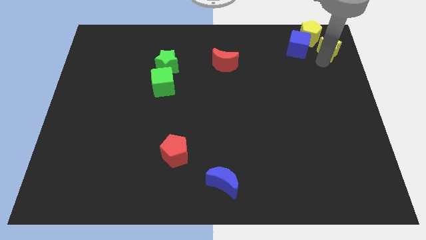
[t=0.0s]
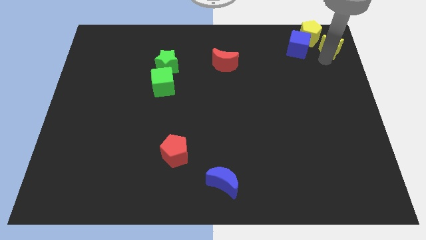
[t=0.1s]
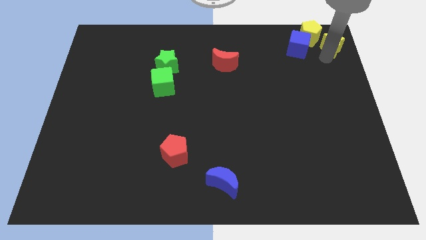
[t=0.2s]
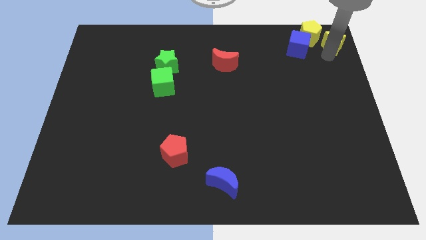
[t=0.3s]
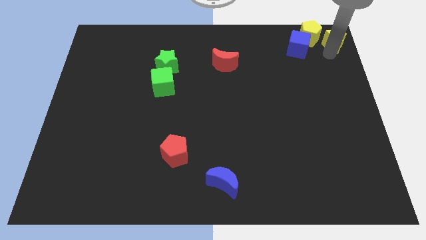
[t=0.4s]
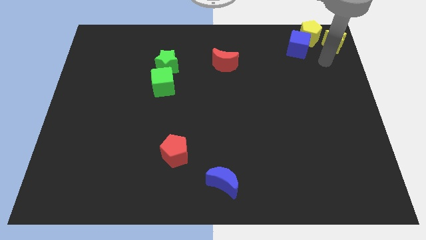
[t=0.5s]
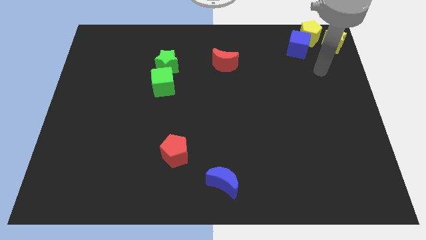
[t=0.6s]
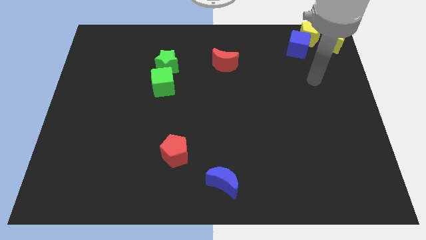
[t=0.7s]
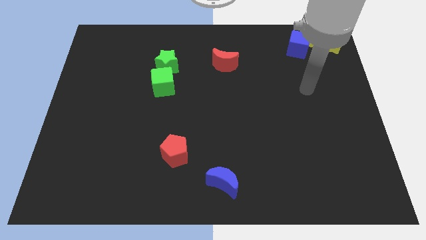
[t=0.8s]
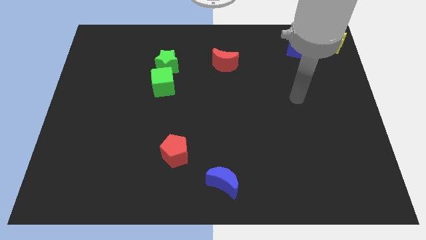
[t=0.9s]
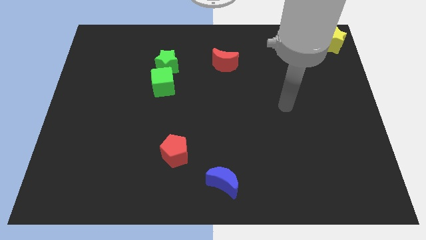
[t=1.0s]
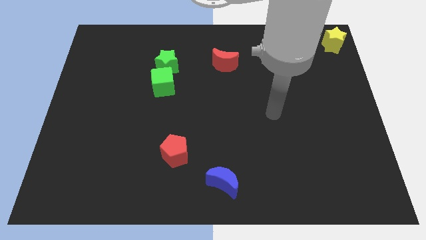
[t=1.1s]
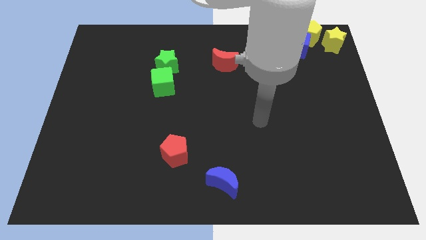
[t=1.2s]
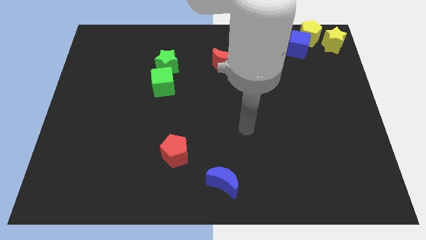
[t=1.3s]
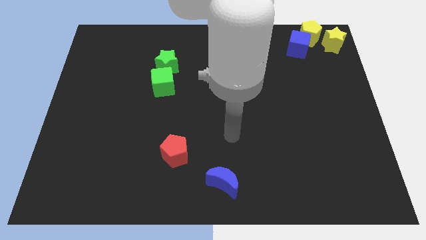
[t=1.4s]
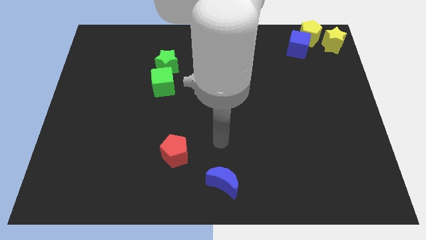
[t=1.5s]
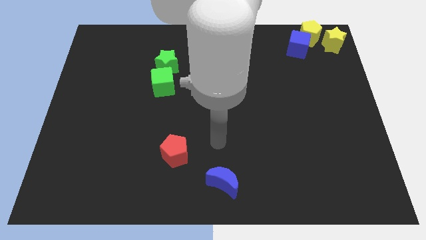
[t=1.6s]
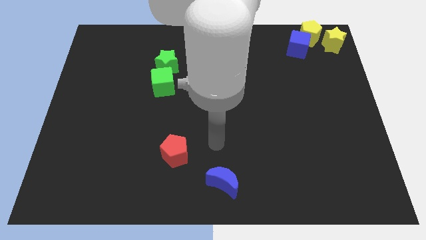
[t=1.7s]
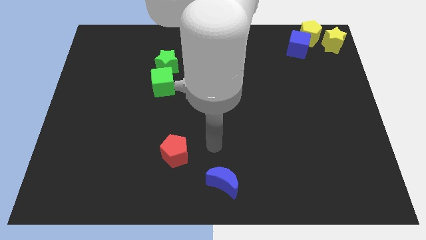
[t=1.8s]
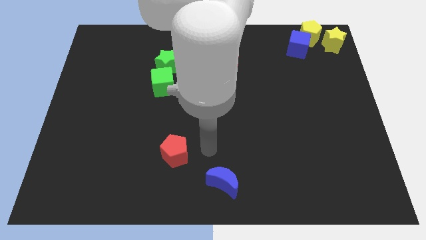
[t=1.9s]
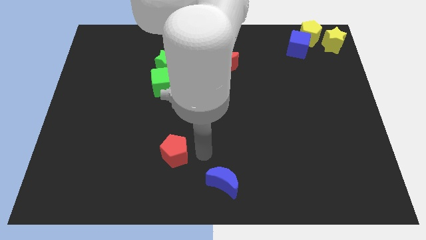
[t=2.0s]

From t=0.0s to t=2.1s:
move your arm to the right of the red pentagon

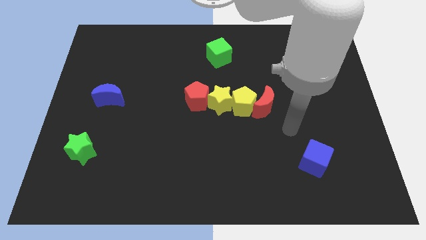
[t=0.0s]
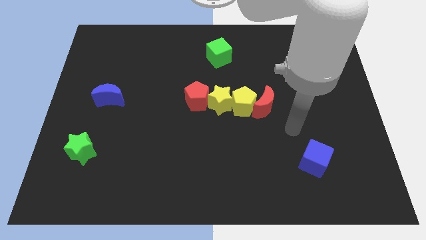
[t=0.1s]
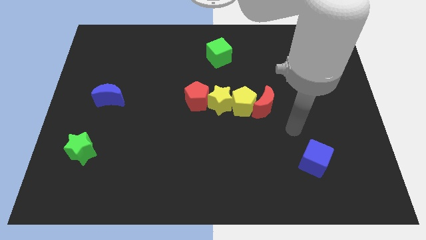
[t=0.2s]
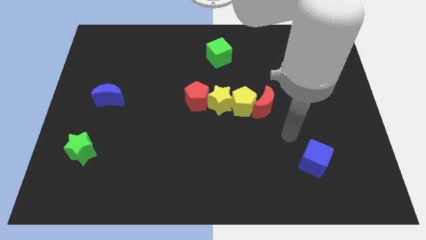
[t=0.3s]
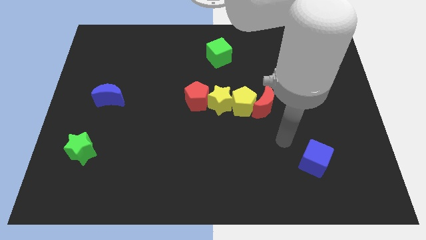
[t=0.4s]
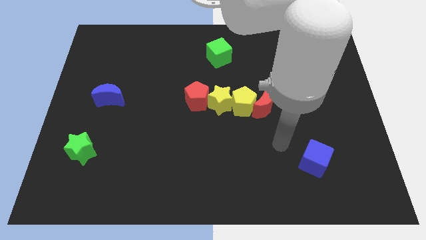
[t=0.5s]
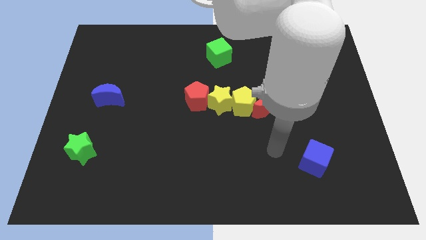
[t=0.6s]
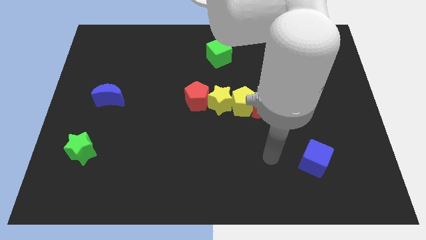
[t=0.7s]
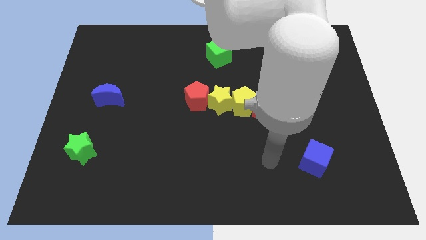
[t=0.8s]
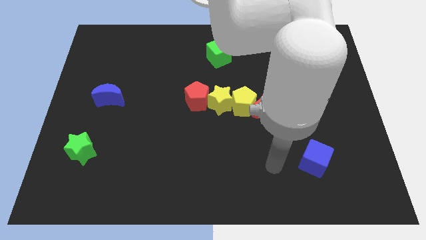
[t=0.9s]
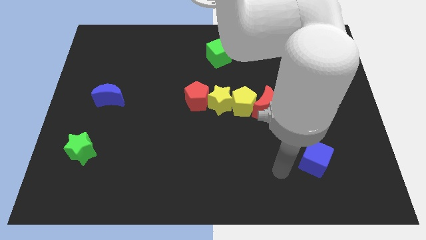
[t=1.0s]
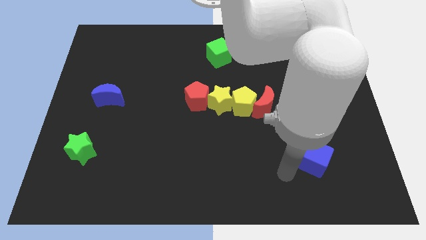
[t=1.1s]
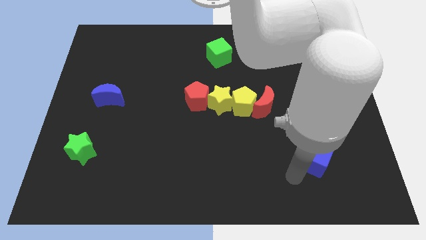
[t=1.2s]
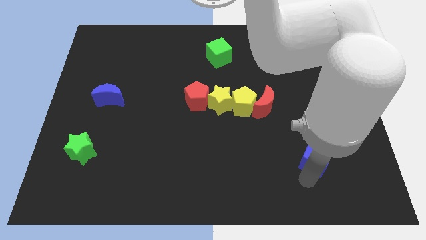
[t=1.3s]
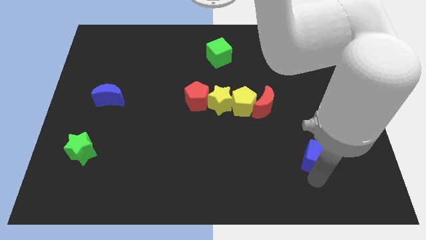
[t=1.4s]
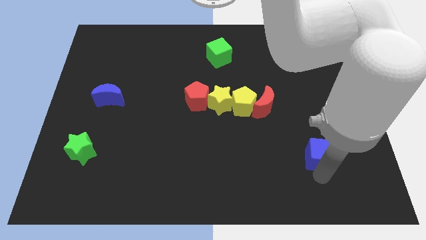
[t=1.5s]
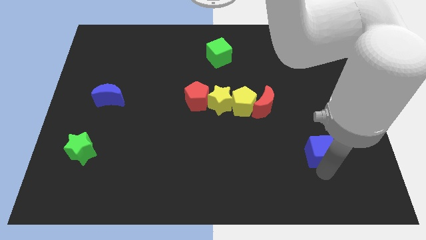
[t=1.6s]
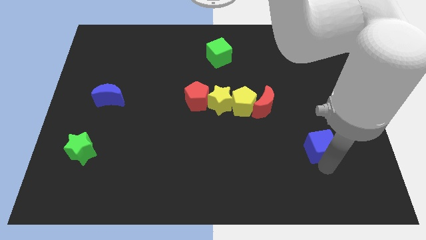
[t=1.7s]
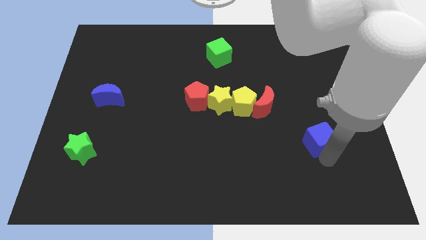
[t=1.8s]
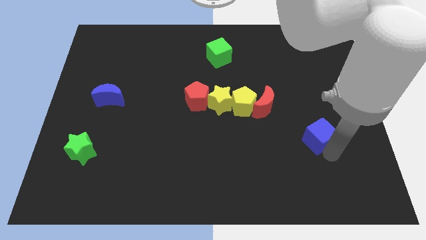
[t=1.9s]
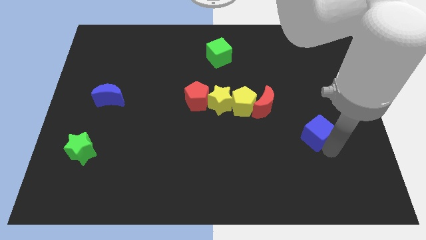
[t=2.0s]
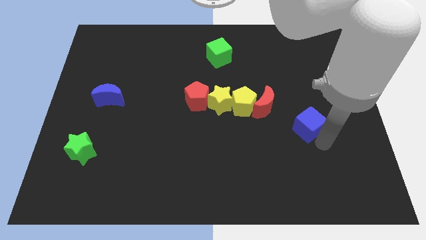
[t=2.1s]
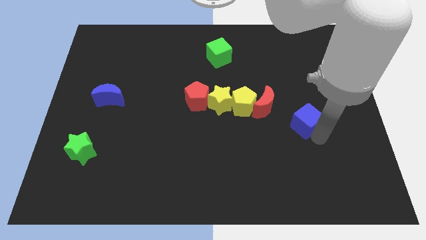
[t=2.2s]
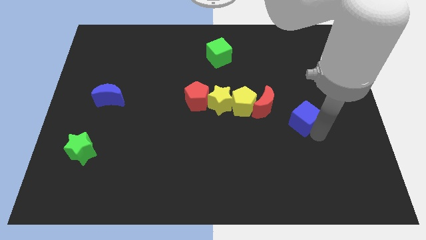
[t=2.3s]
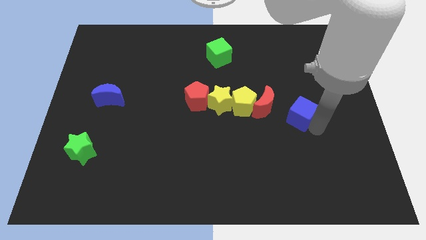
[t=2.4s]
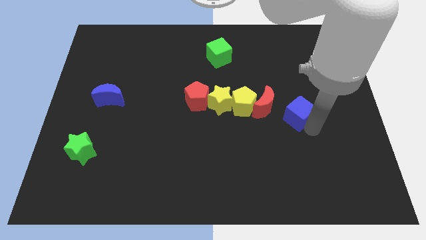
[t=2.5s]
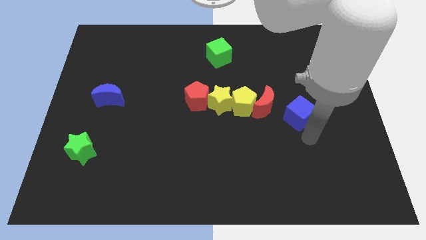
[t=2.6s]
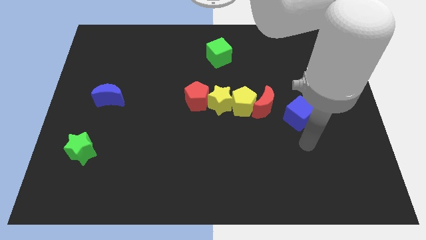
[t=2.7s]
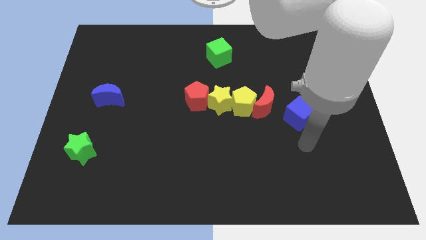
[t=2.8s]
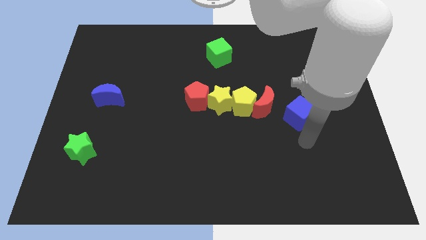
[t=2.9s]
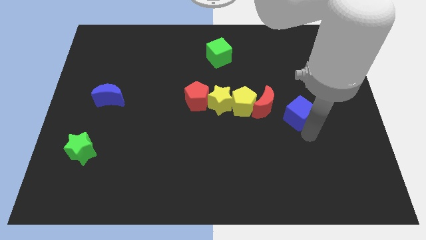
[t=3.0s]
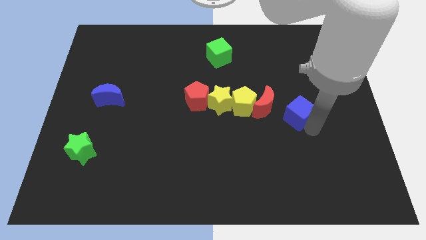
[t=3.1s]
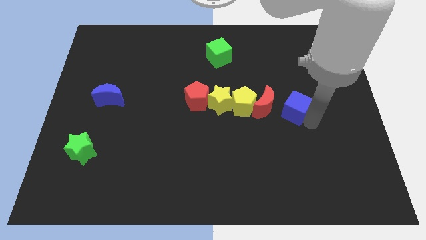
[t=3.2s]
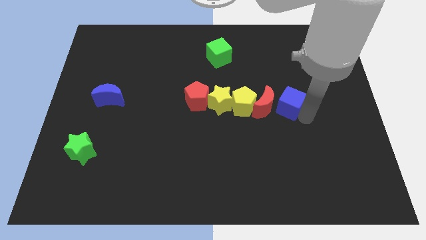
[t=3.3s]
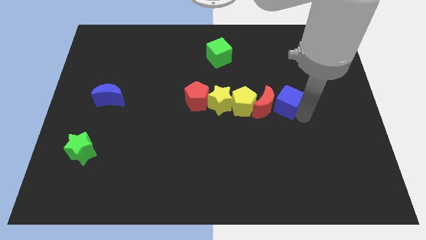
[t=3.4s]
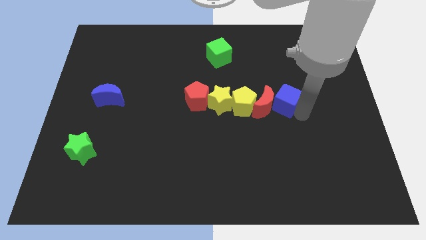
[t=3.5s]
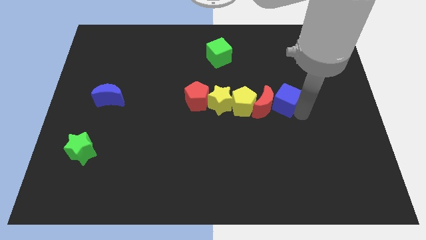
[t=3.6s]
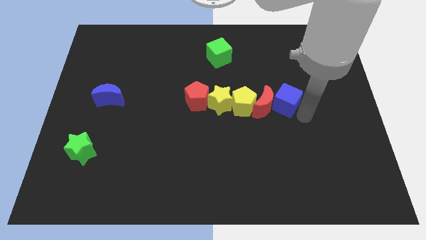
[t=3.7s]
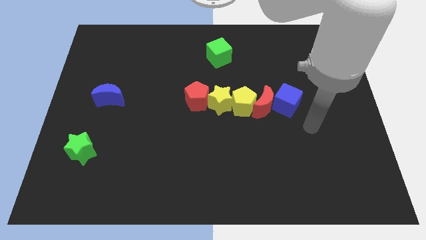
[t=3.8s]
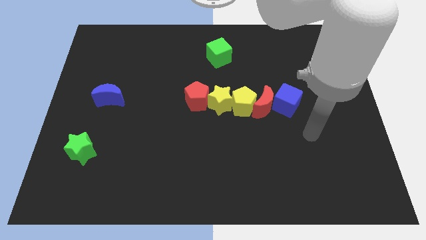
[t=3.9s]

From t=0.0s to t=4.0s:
move blue cube into red crescent

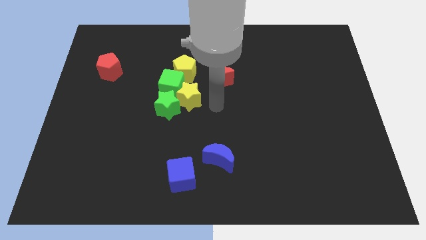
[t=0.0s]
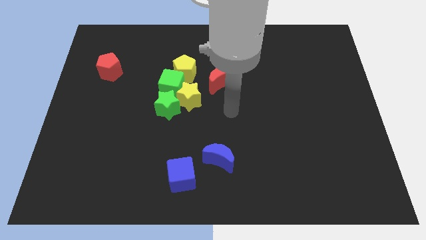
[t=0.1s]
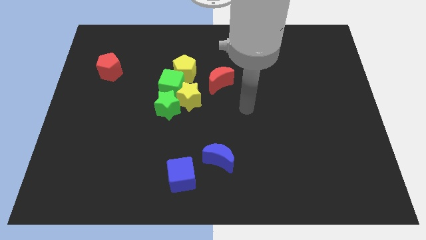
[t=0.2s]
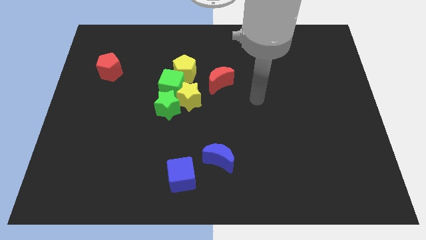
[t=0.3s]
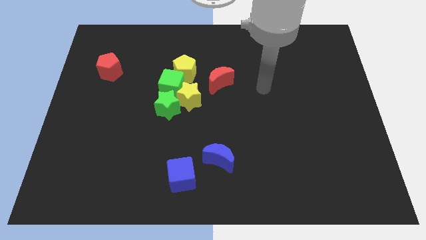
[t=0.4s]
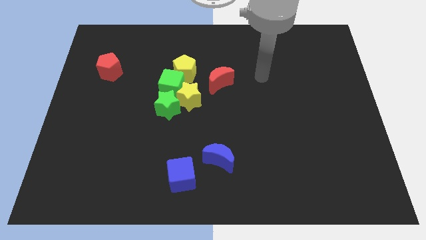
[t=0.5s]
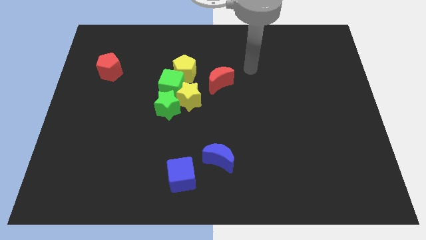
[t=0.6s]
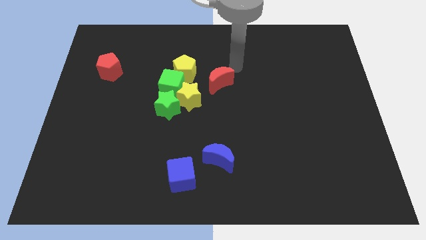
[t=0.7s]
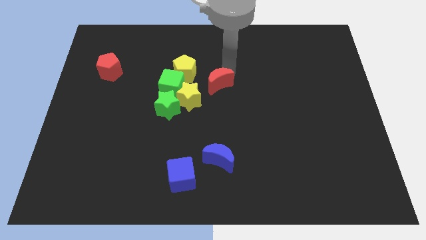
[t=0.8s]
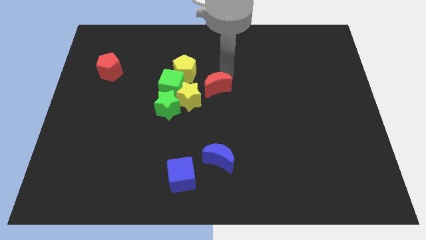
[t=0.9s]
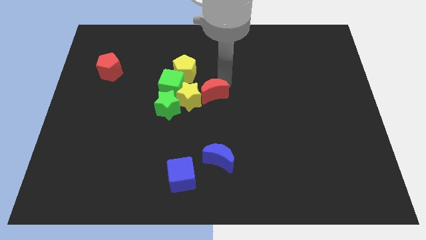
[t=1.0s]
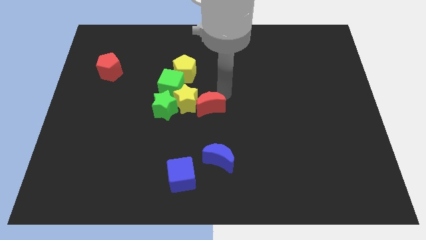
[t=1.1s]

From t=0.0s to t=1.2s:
push the red moon into the yellow star

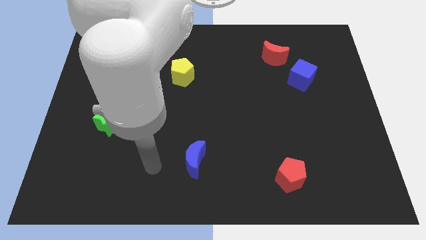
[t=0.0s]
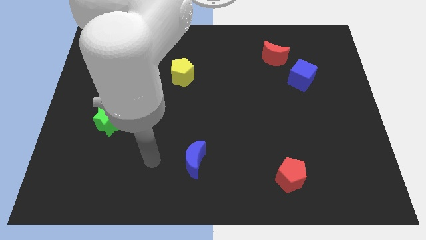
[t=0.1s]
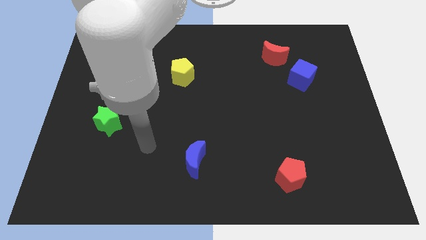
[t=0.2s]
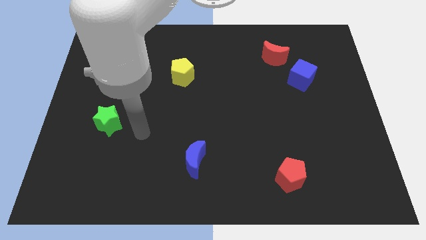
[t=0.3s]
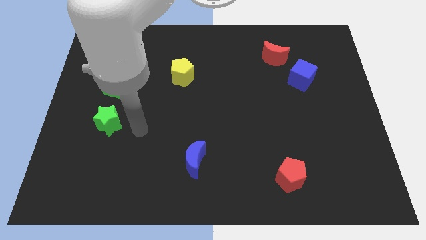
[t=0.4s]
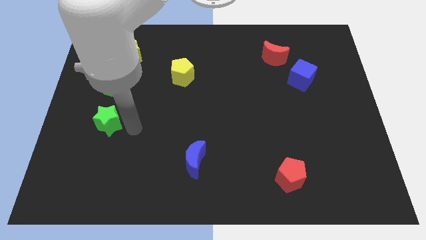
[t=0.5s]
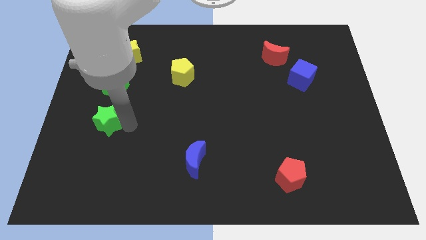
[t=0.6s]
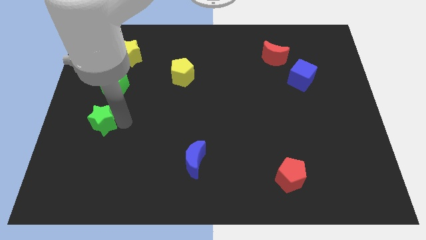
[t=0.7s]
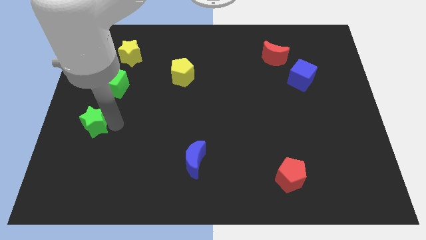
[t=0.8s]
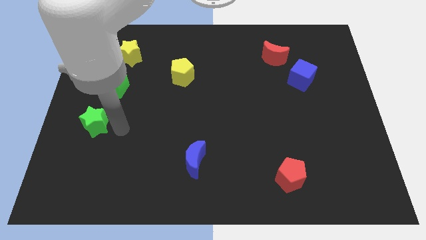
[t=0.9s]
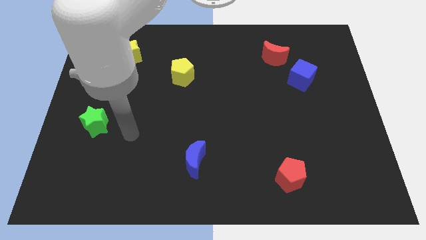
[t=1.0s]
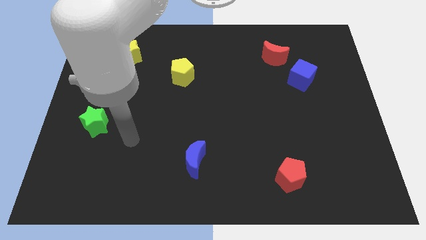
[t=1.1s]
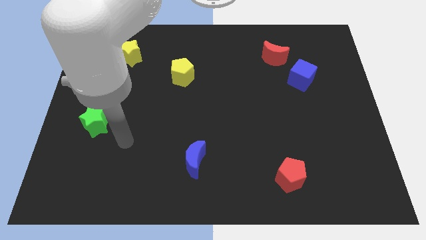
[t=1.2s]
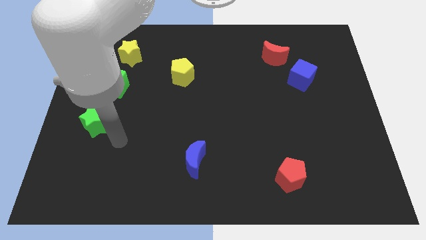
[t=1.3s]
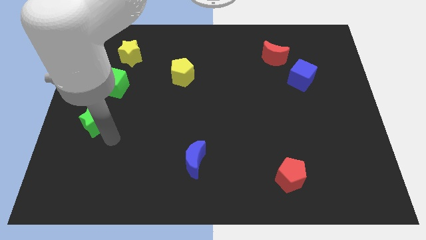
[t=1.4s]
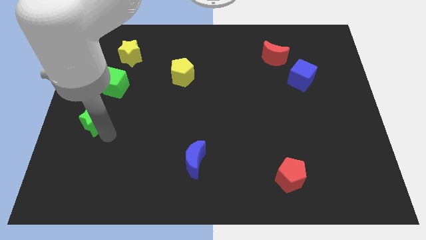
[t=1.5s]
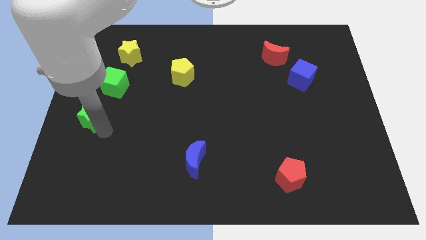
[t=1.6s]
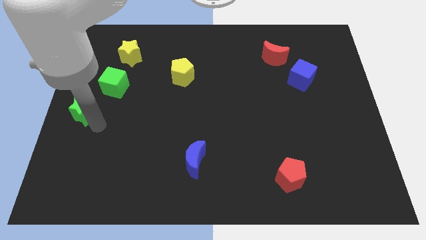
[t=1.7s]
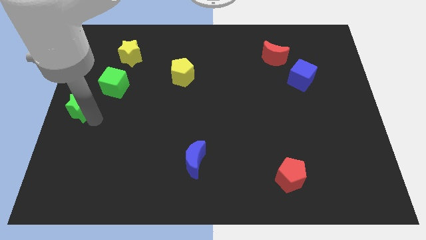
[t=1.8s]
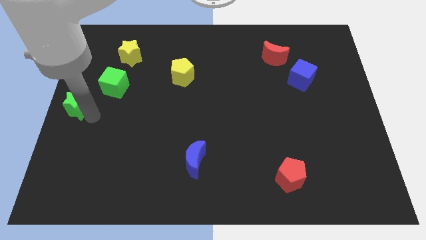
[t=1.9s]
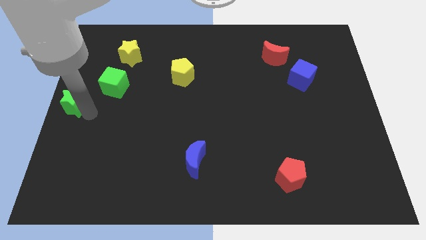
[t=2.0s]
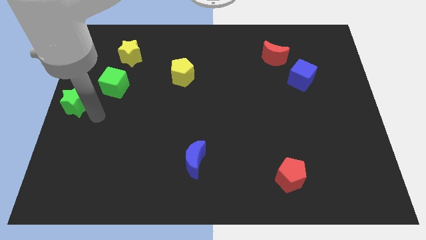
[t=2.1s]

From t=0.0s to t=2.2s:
place the green star at left center of the board
